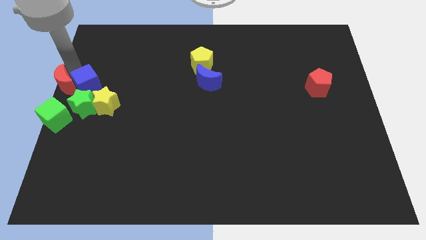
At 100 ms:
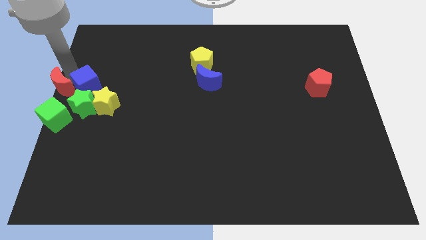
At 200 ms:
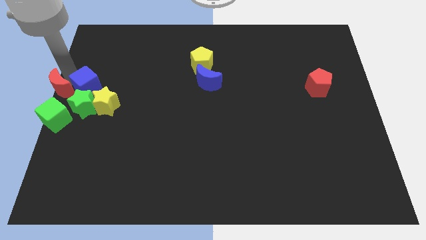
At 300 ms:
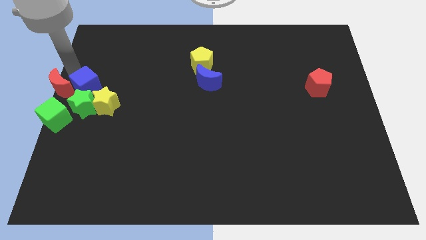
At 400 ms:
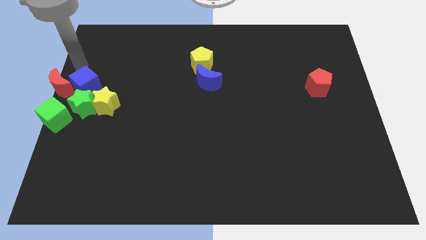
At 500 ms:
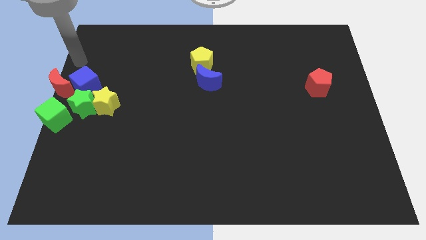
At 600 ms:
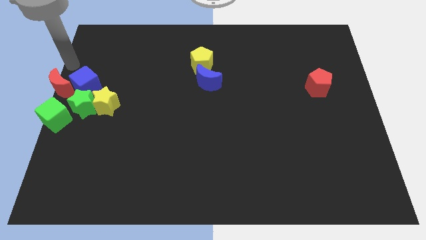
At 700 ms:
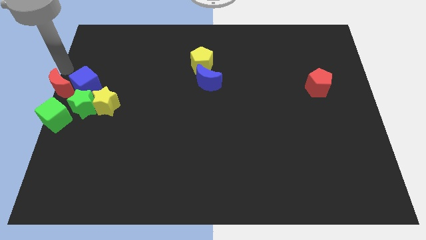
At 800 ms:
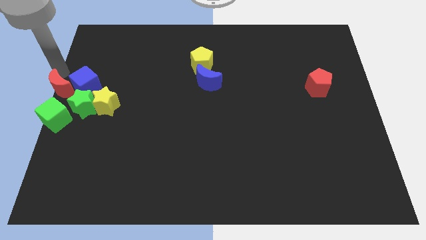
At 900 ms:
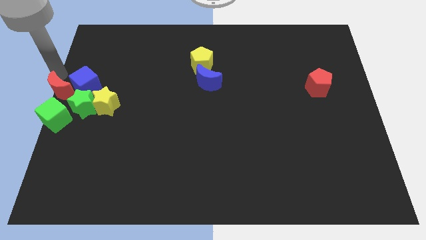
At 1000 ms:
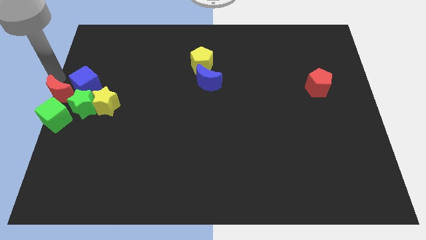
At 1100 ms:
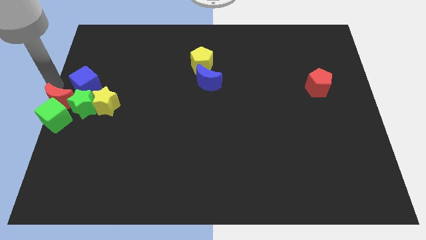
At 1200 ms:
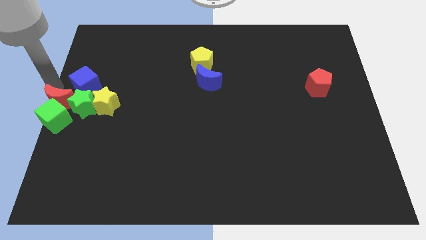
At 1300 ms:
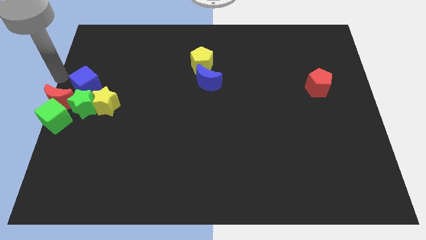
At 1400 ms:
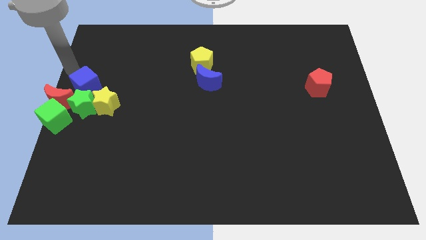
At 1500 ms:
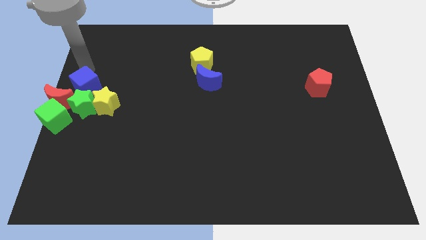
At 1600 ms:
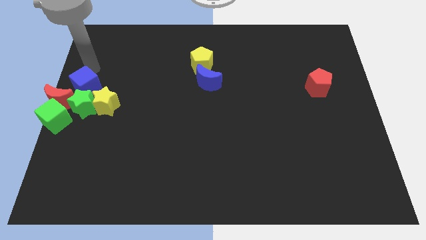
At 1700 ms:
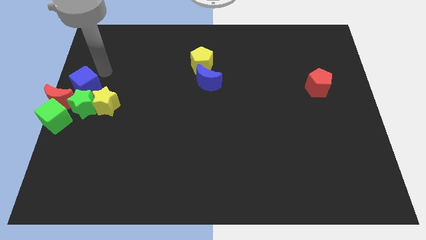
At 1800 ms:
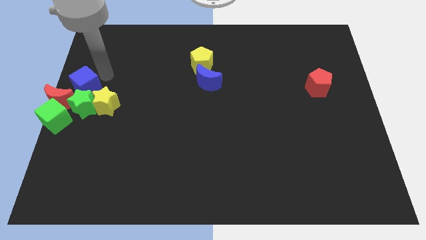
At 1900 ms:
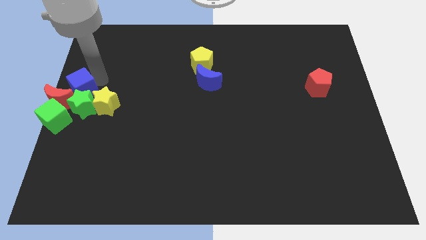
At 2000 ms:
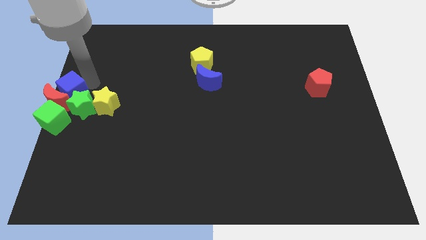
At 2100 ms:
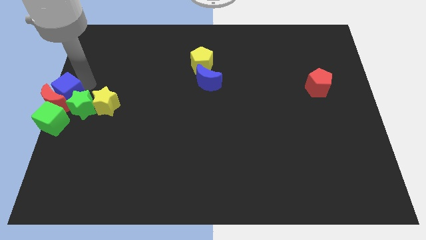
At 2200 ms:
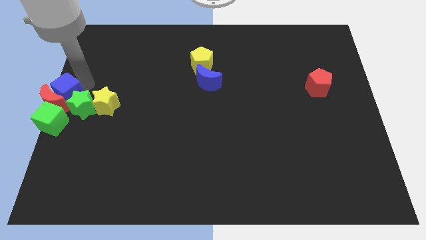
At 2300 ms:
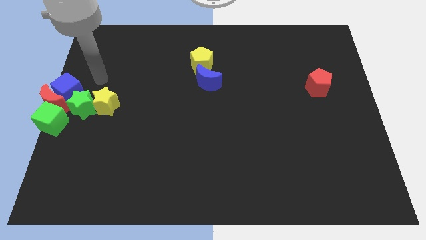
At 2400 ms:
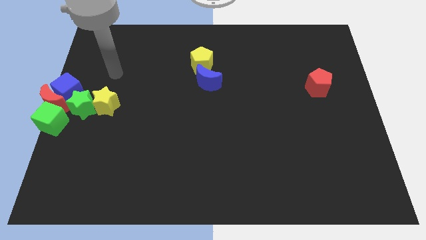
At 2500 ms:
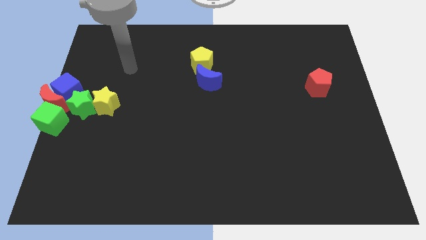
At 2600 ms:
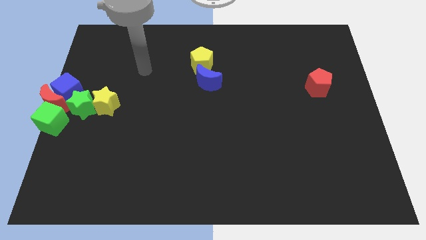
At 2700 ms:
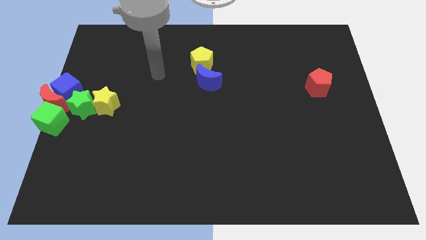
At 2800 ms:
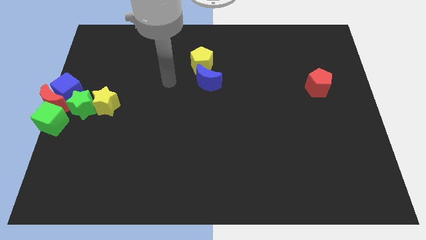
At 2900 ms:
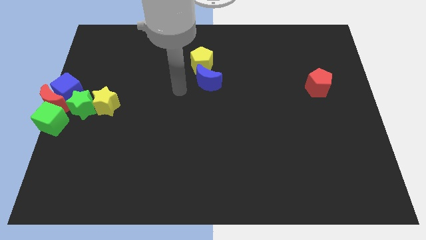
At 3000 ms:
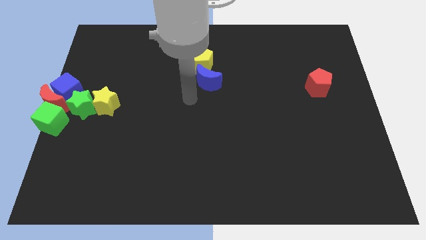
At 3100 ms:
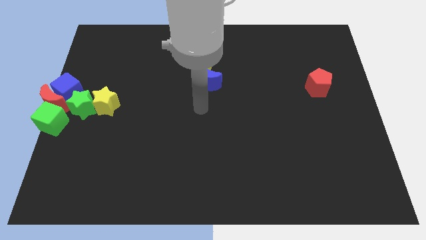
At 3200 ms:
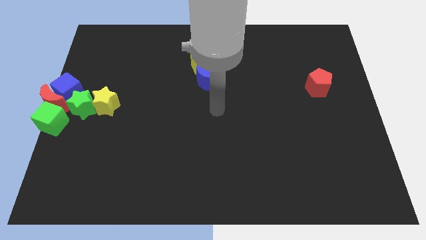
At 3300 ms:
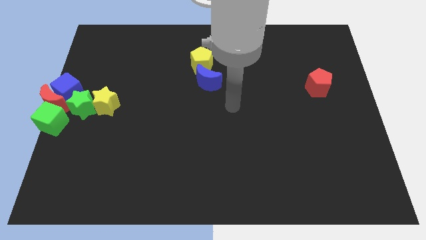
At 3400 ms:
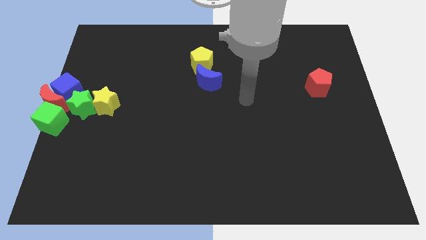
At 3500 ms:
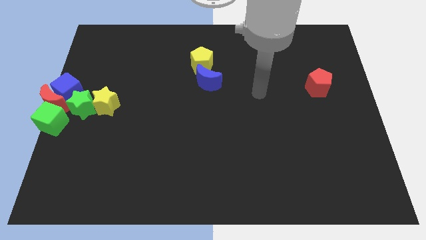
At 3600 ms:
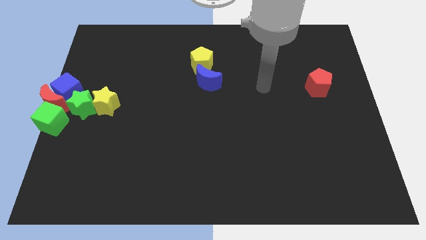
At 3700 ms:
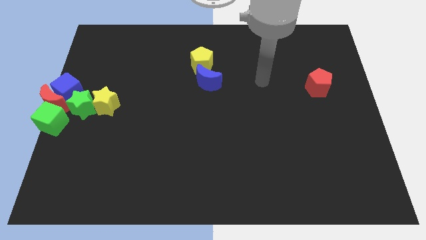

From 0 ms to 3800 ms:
push the blue cube into the red crescent to the left center

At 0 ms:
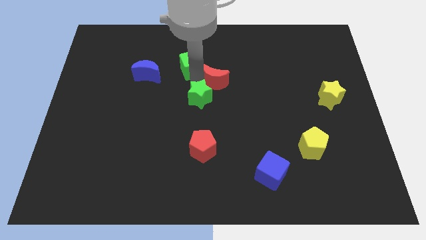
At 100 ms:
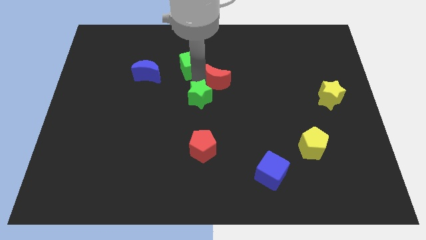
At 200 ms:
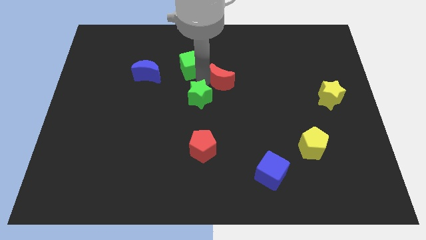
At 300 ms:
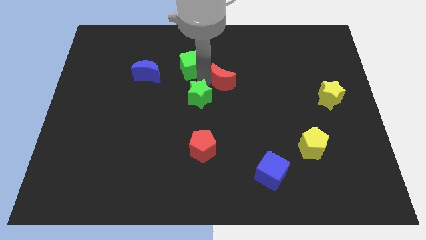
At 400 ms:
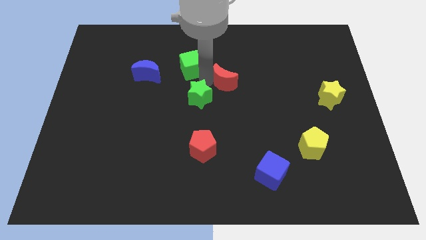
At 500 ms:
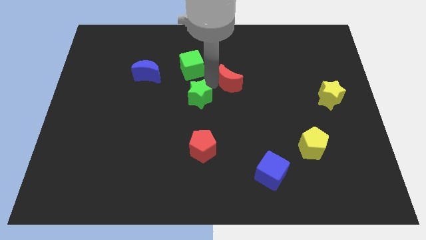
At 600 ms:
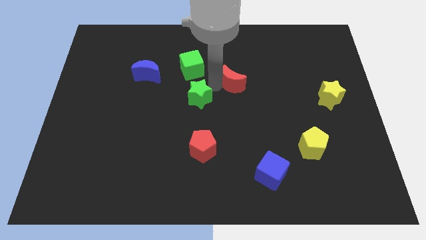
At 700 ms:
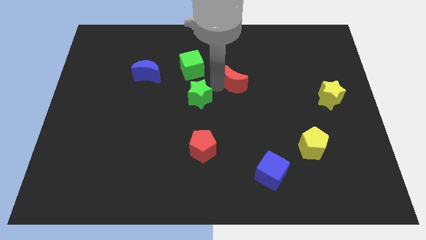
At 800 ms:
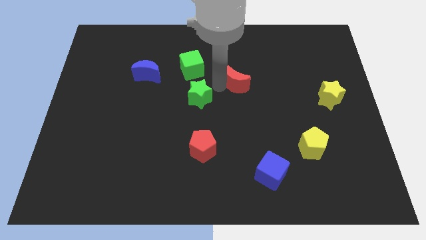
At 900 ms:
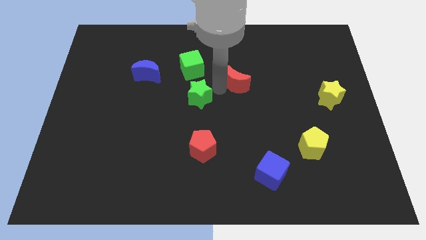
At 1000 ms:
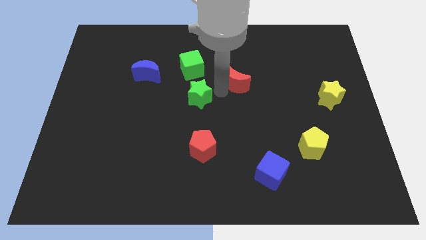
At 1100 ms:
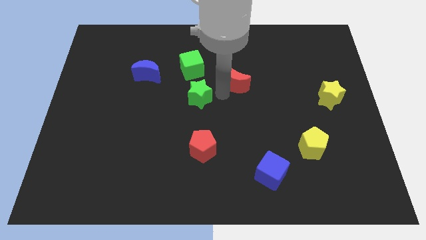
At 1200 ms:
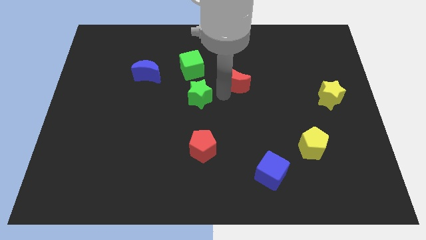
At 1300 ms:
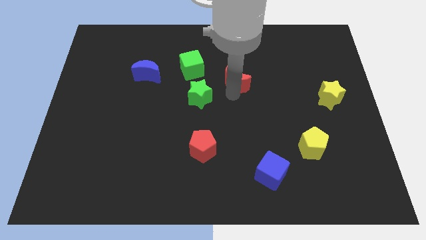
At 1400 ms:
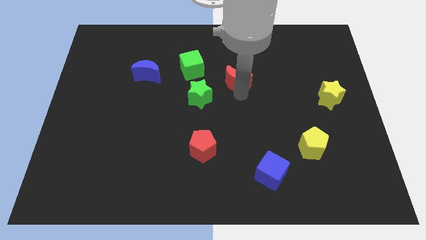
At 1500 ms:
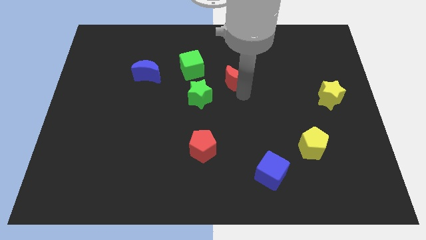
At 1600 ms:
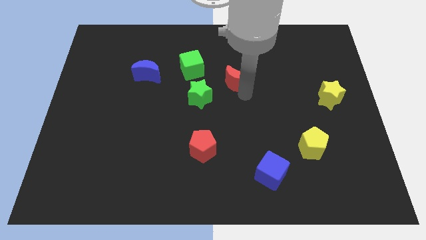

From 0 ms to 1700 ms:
push the red moon slightly to the right

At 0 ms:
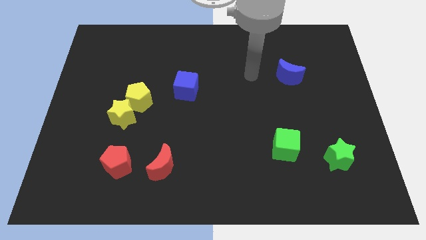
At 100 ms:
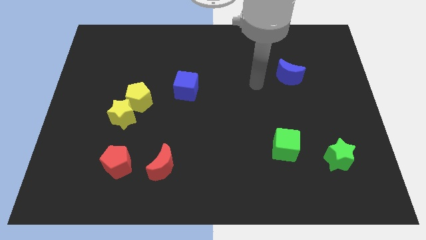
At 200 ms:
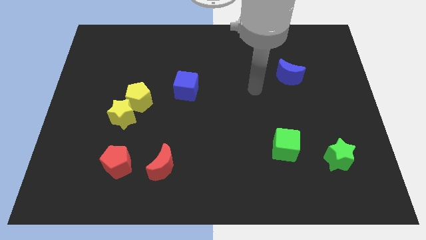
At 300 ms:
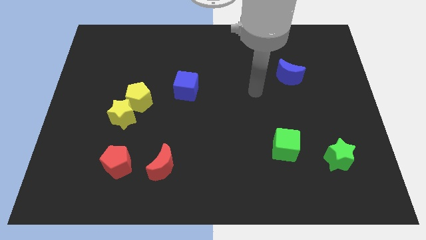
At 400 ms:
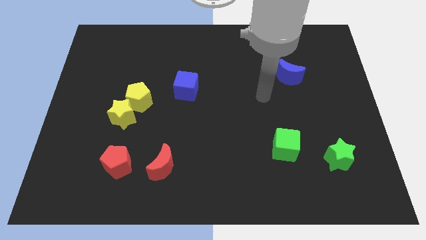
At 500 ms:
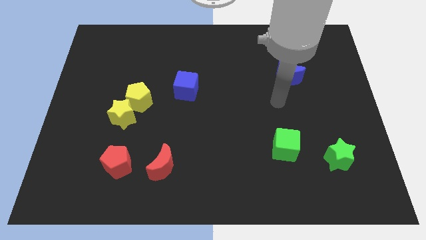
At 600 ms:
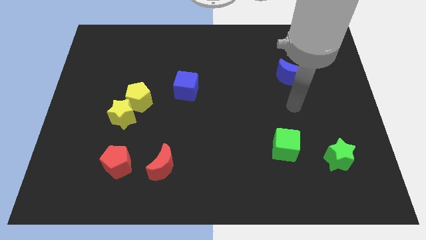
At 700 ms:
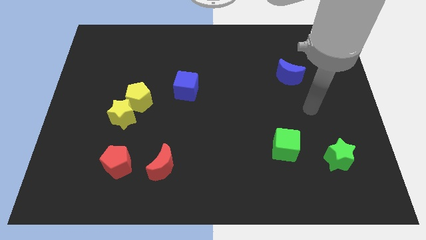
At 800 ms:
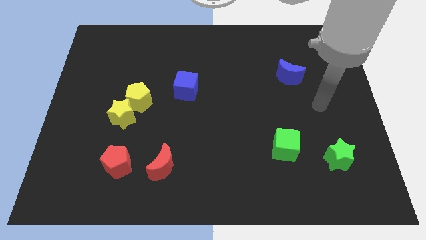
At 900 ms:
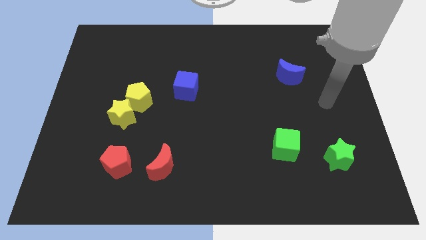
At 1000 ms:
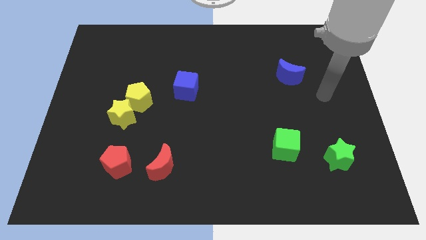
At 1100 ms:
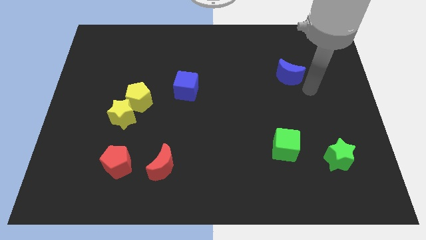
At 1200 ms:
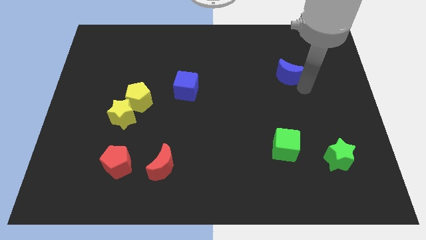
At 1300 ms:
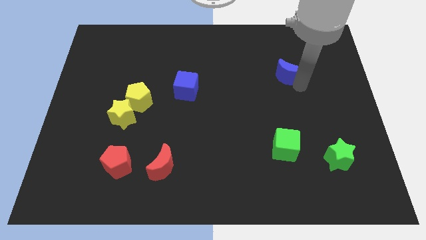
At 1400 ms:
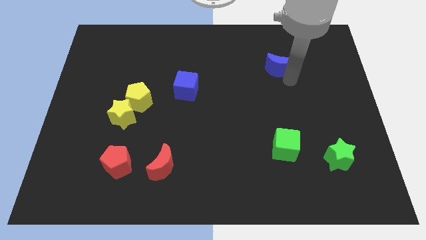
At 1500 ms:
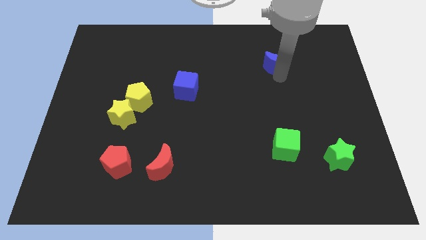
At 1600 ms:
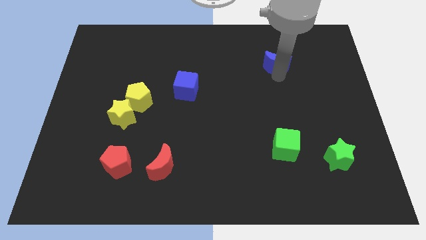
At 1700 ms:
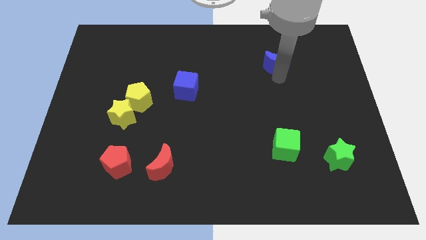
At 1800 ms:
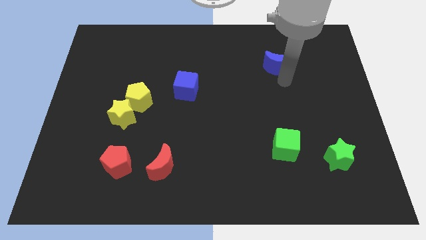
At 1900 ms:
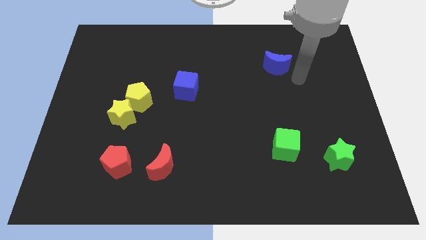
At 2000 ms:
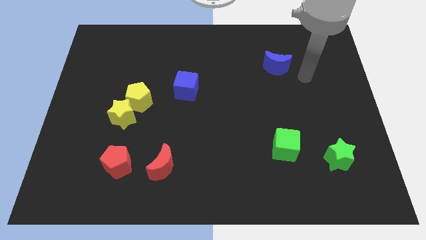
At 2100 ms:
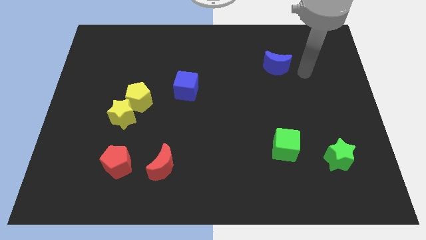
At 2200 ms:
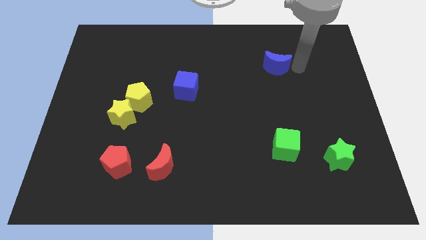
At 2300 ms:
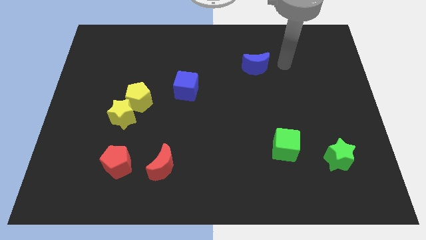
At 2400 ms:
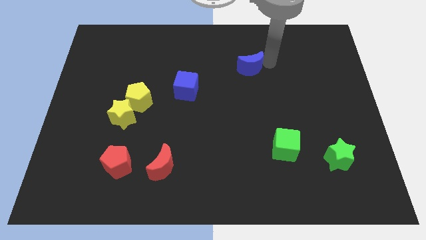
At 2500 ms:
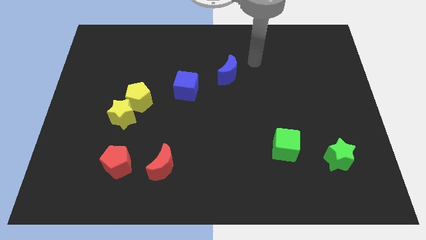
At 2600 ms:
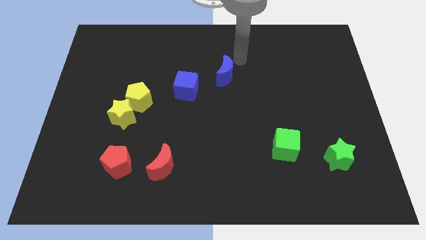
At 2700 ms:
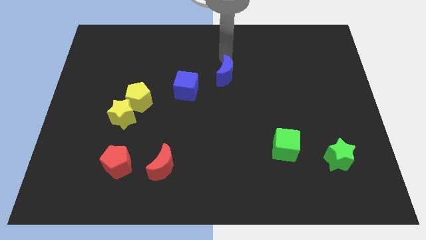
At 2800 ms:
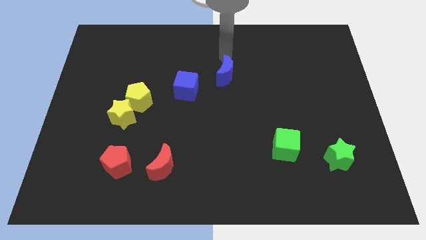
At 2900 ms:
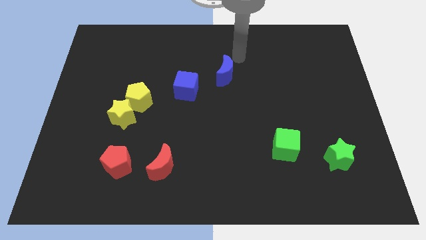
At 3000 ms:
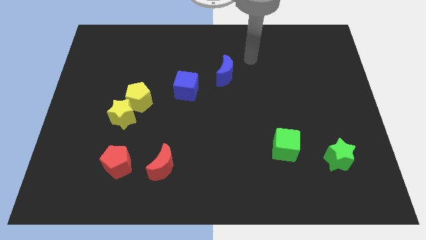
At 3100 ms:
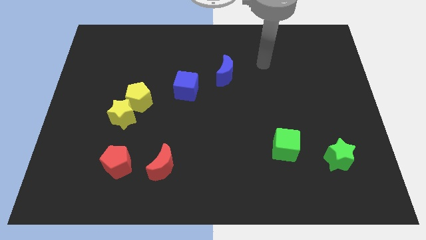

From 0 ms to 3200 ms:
move blue moon towards the blue cube

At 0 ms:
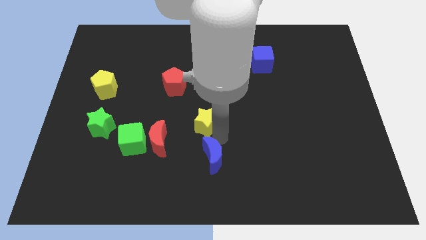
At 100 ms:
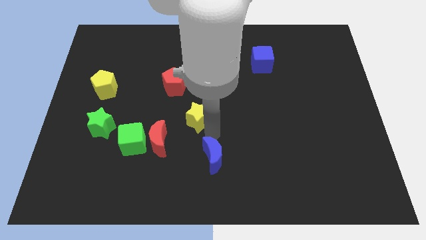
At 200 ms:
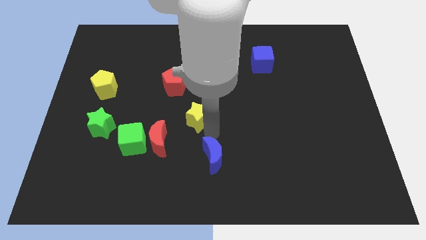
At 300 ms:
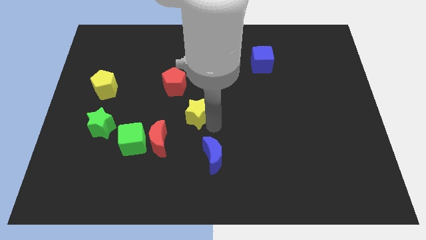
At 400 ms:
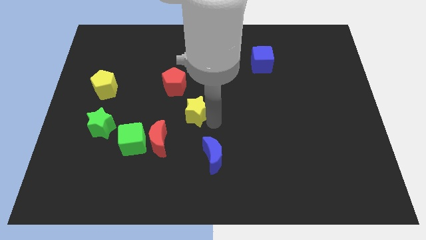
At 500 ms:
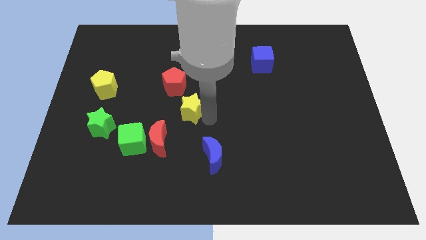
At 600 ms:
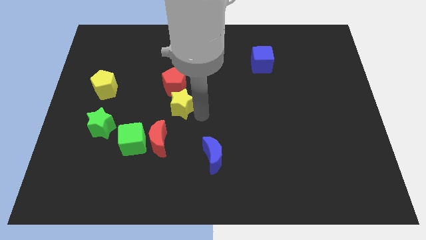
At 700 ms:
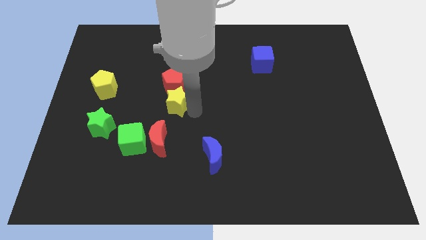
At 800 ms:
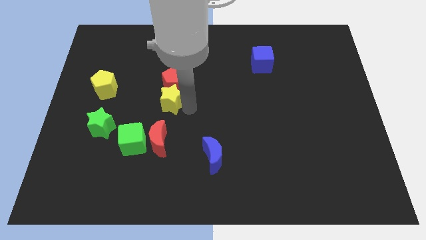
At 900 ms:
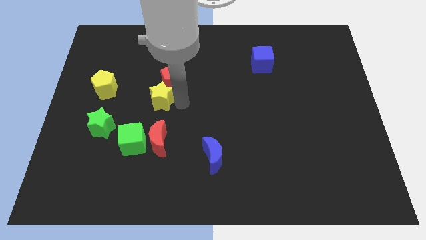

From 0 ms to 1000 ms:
push the yellow star to the bottom side of the red pentagon
